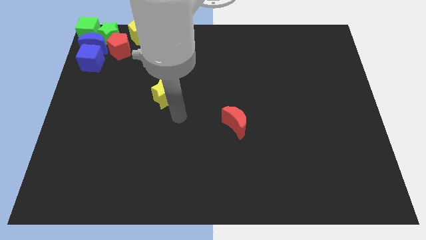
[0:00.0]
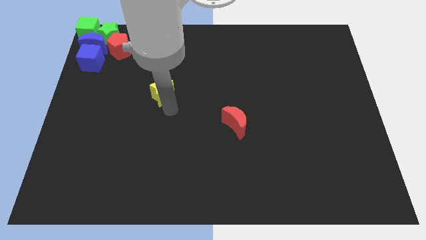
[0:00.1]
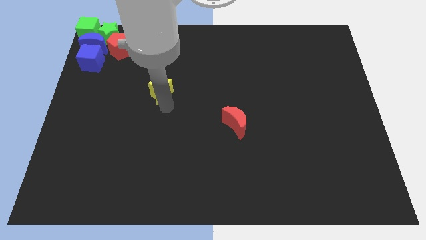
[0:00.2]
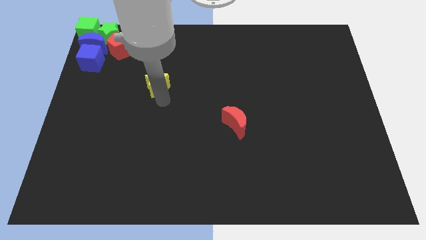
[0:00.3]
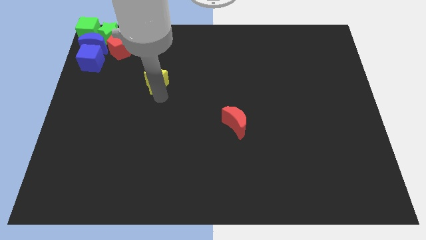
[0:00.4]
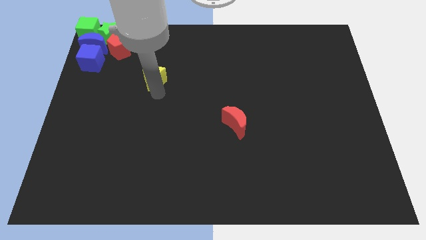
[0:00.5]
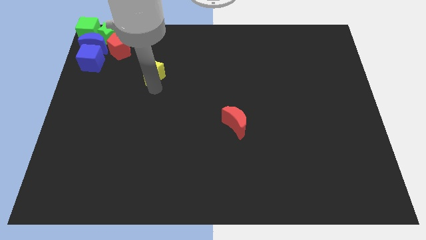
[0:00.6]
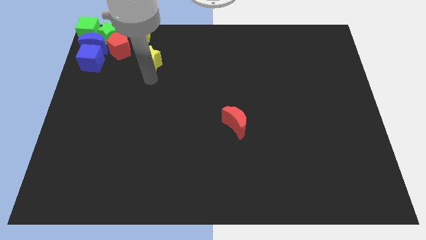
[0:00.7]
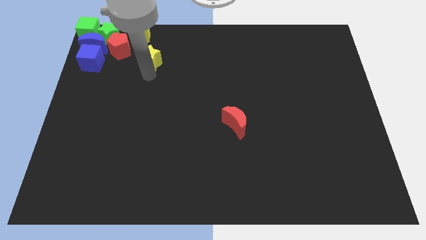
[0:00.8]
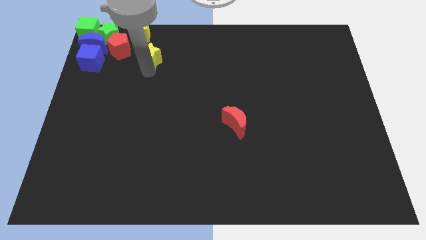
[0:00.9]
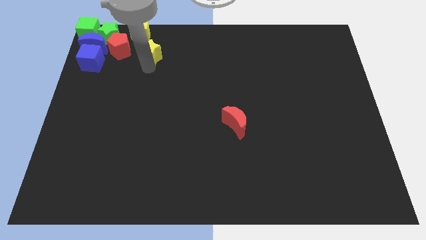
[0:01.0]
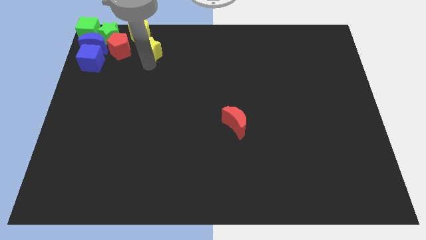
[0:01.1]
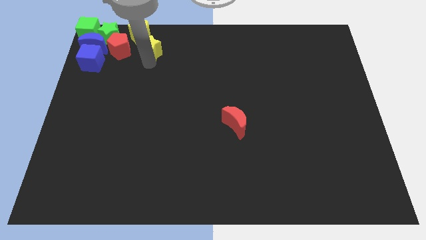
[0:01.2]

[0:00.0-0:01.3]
place yellow star below yellow pentagon

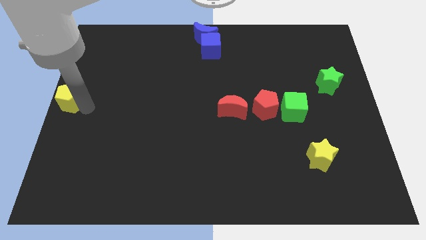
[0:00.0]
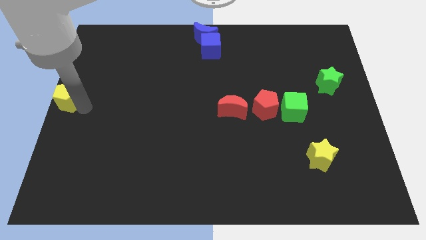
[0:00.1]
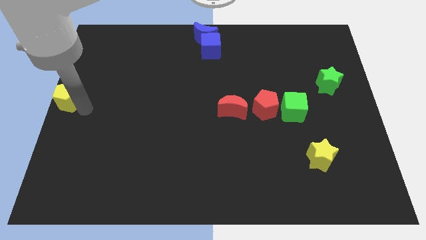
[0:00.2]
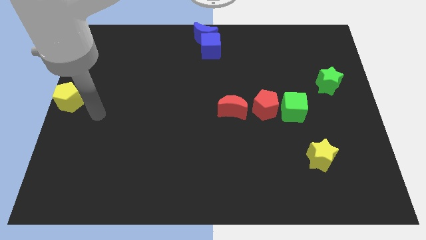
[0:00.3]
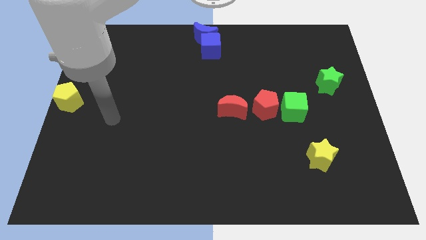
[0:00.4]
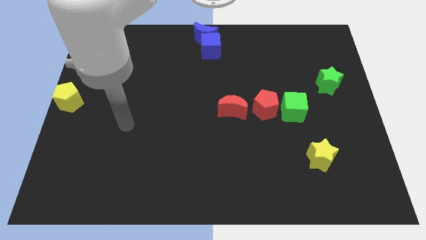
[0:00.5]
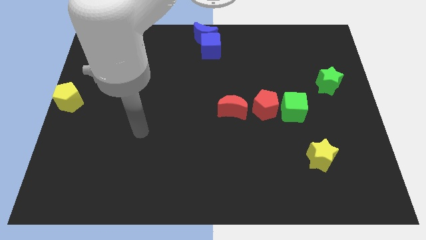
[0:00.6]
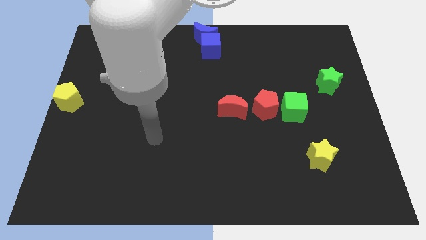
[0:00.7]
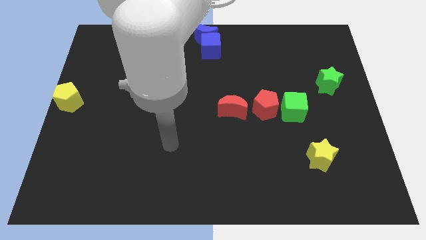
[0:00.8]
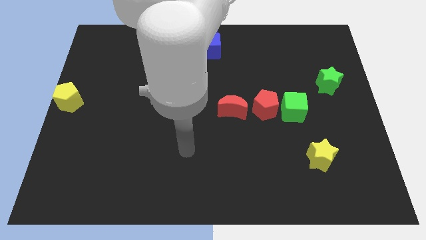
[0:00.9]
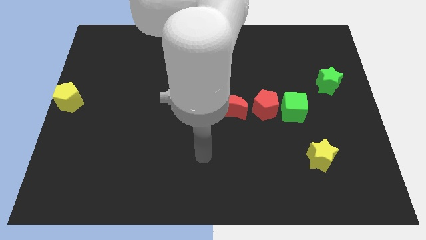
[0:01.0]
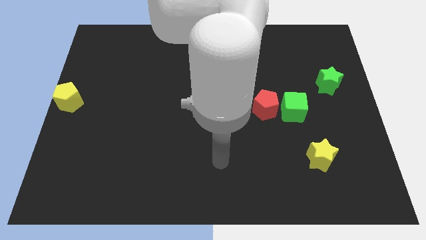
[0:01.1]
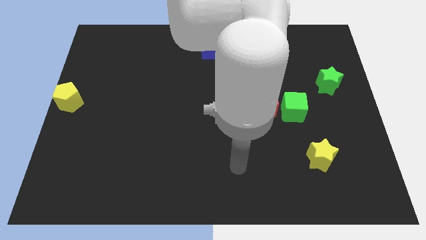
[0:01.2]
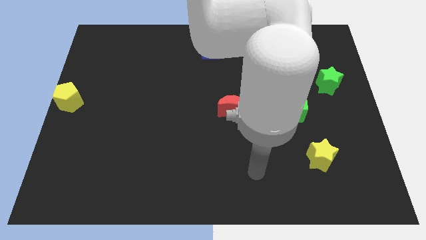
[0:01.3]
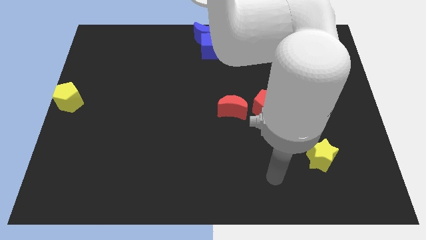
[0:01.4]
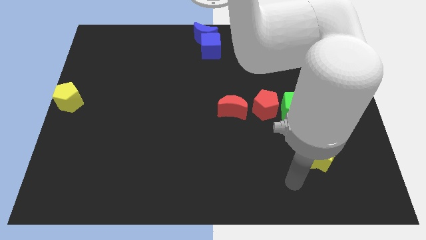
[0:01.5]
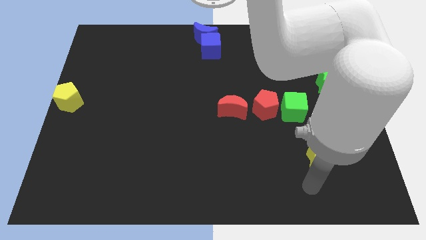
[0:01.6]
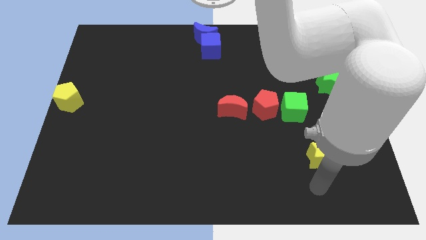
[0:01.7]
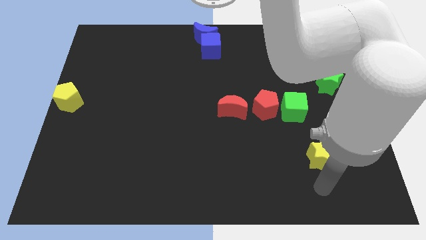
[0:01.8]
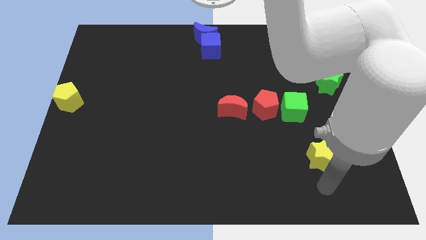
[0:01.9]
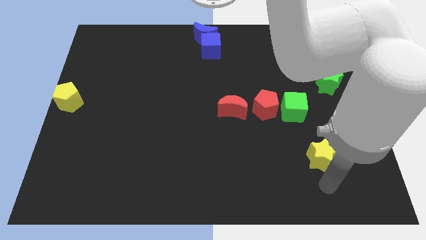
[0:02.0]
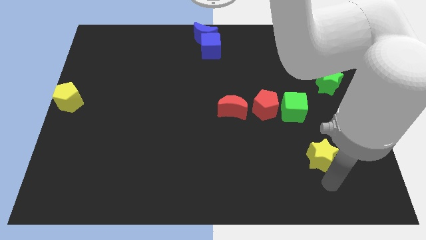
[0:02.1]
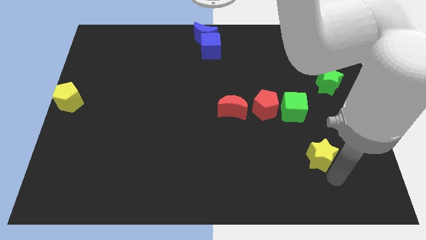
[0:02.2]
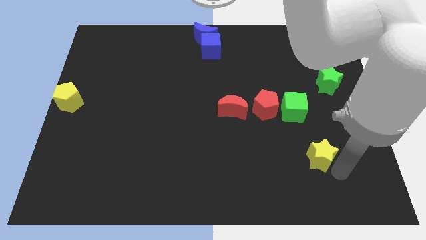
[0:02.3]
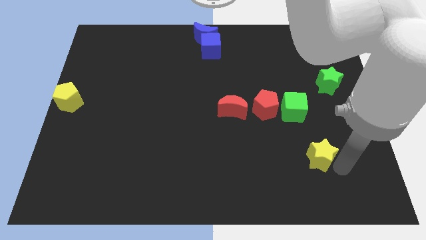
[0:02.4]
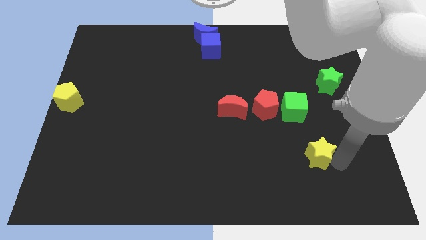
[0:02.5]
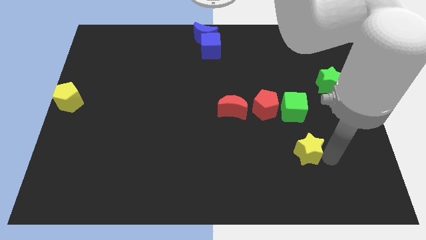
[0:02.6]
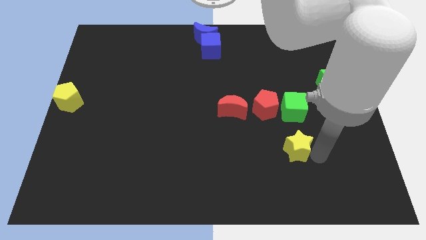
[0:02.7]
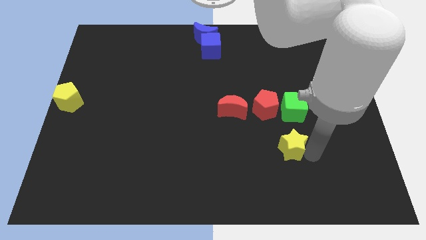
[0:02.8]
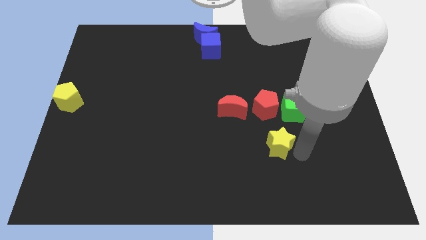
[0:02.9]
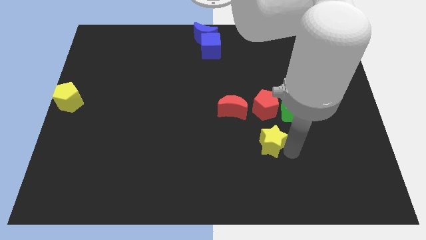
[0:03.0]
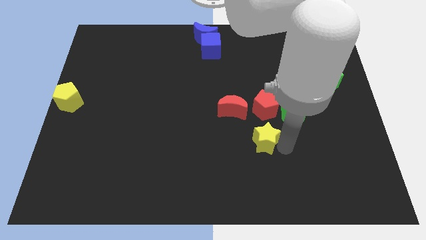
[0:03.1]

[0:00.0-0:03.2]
put the yellow star below the red pentagon

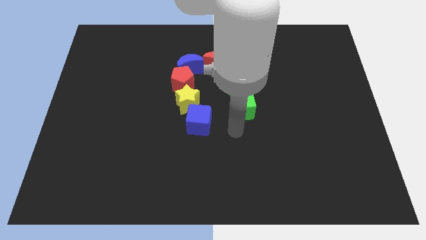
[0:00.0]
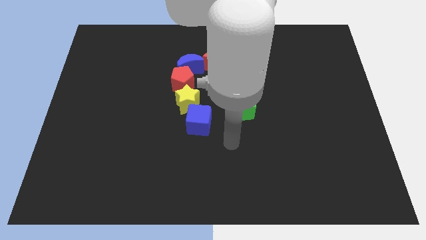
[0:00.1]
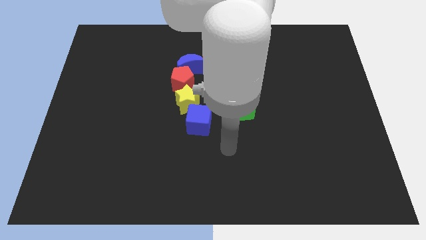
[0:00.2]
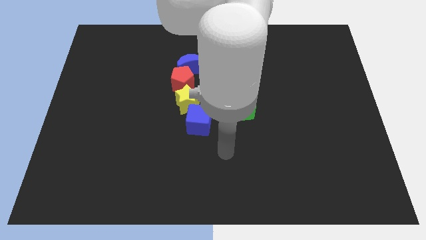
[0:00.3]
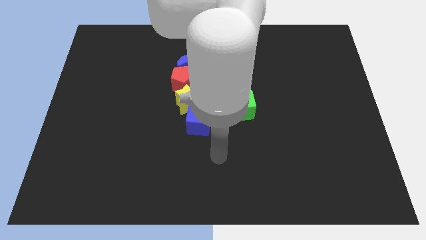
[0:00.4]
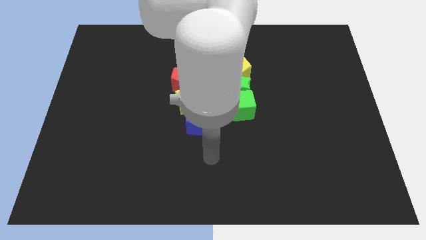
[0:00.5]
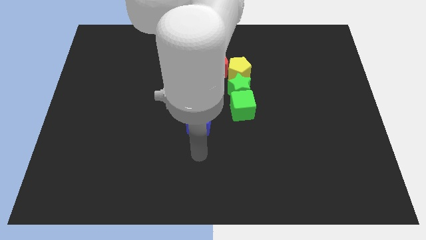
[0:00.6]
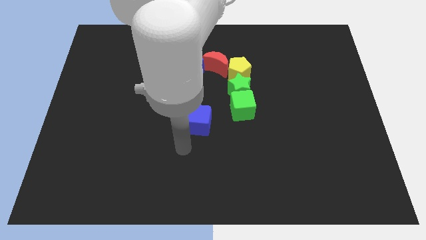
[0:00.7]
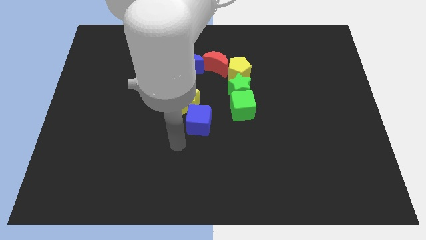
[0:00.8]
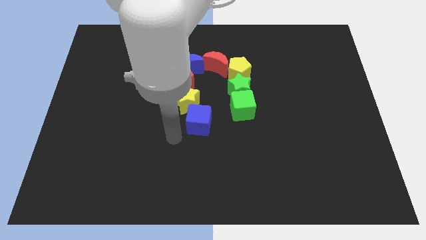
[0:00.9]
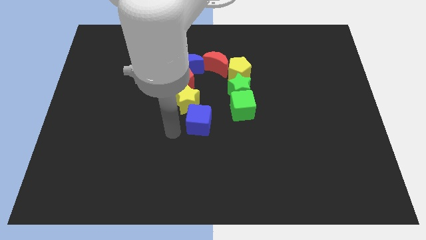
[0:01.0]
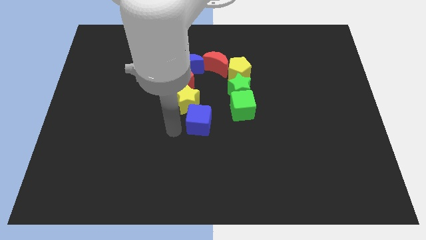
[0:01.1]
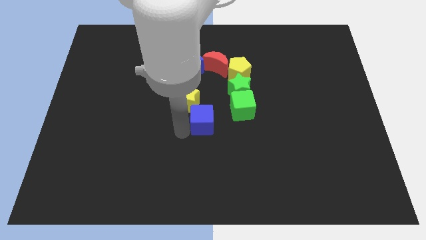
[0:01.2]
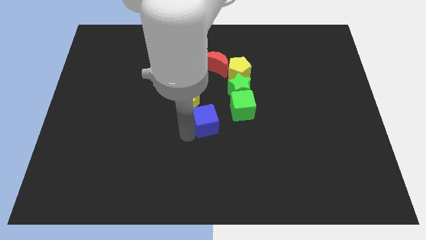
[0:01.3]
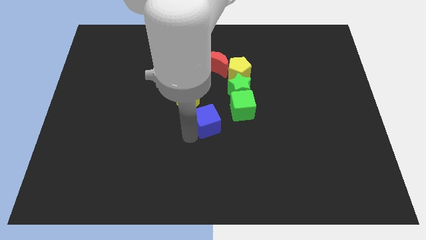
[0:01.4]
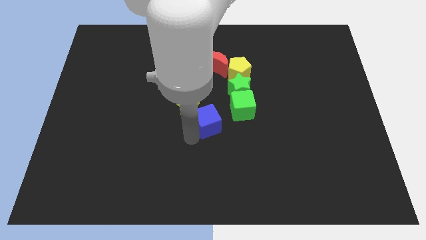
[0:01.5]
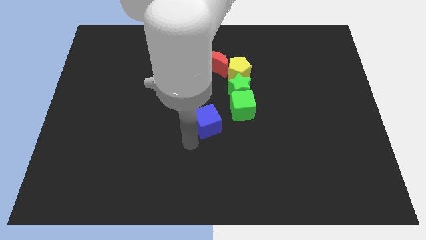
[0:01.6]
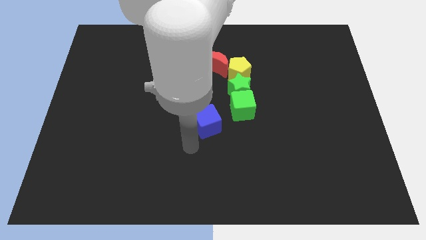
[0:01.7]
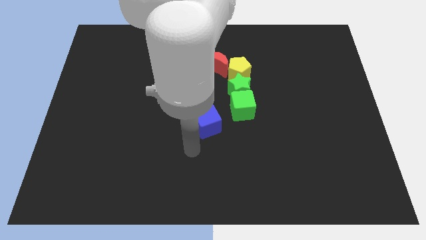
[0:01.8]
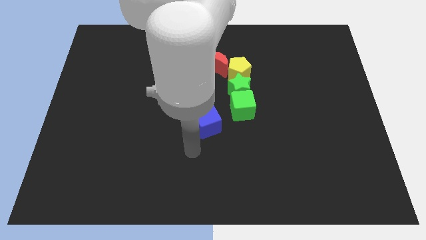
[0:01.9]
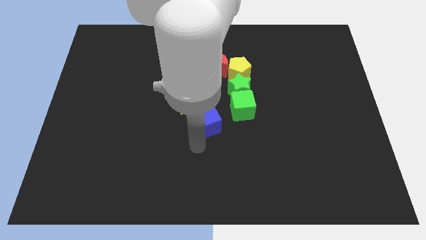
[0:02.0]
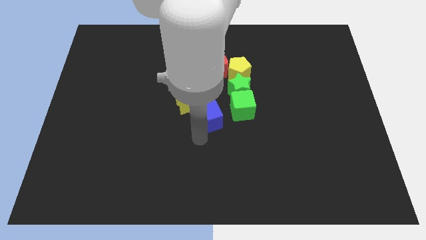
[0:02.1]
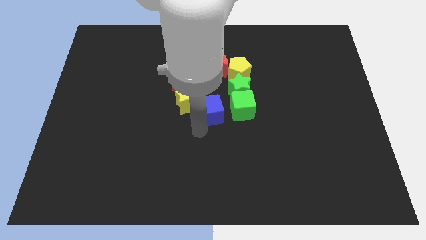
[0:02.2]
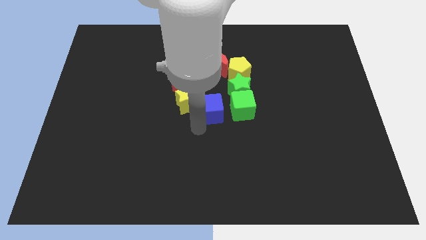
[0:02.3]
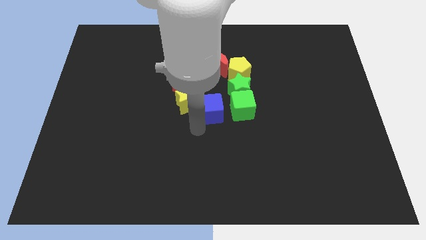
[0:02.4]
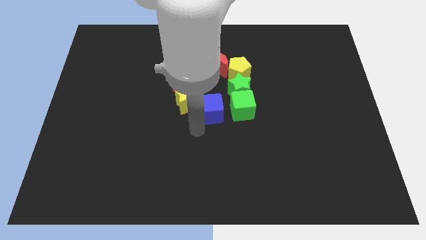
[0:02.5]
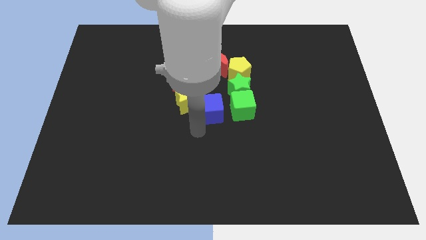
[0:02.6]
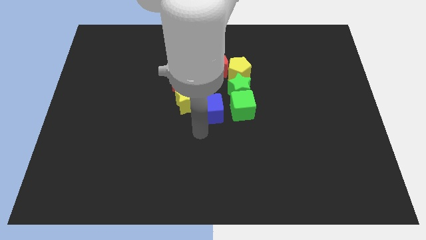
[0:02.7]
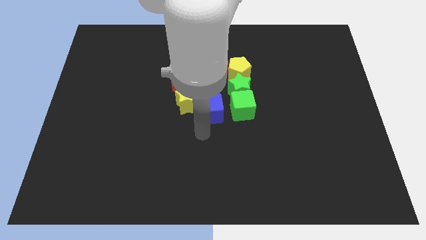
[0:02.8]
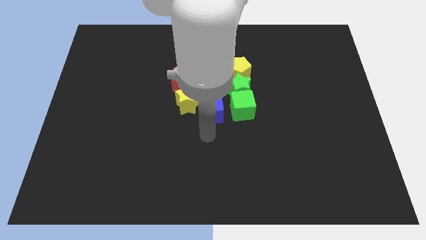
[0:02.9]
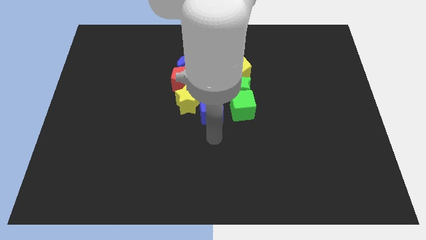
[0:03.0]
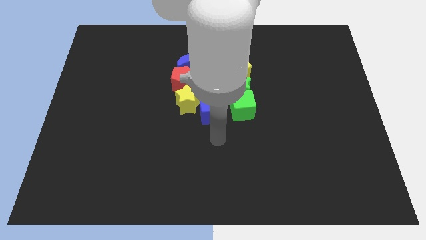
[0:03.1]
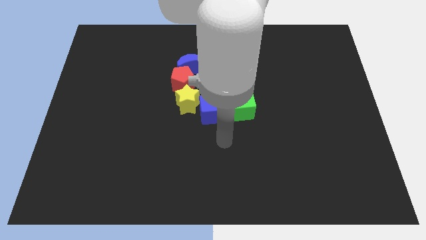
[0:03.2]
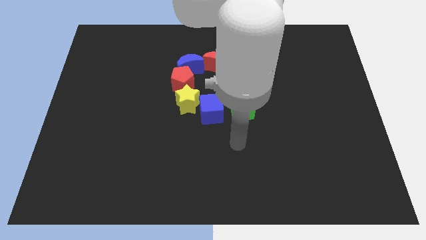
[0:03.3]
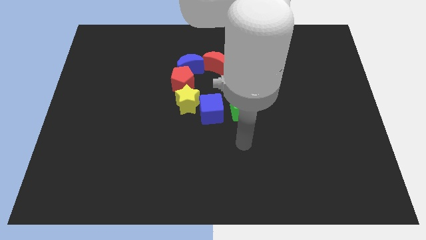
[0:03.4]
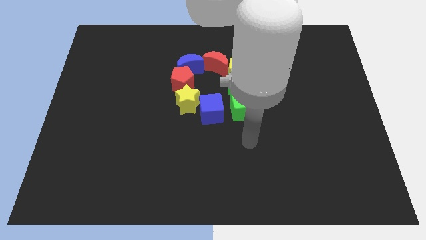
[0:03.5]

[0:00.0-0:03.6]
place the blue cube in between yellow star and green cube

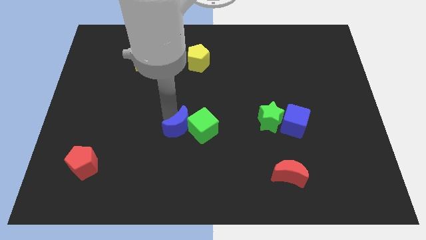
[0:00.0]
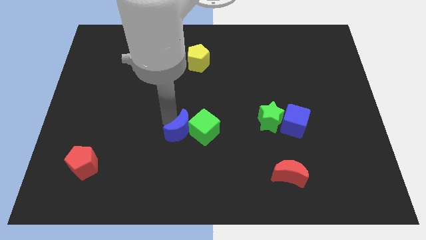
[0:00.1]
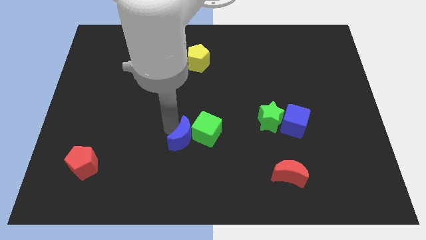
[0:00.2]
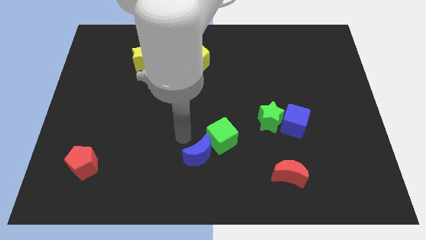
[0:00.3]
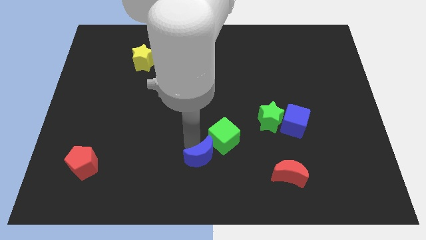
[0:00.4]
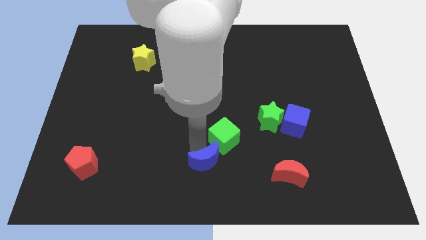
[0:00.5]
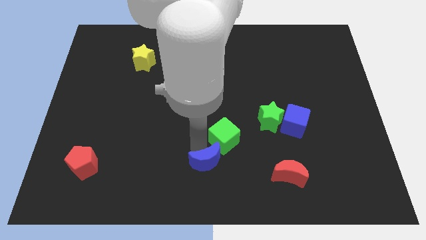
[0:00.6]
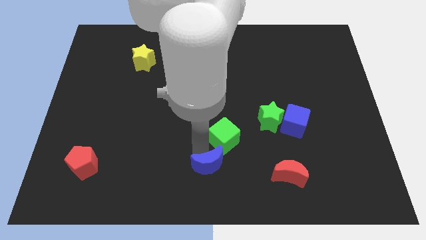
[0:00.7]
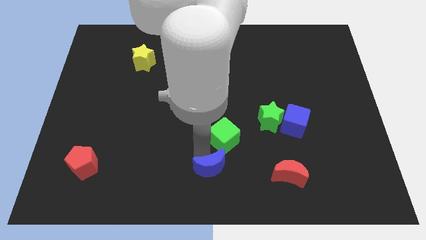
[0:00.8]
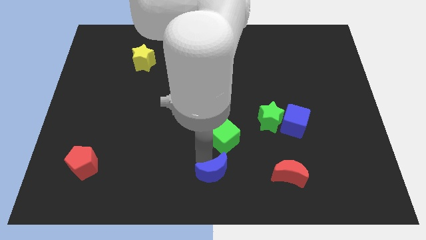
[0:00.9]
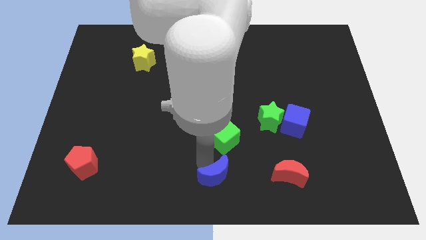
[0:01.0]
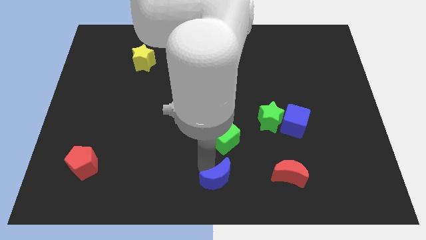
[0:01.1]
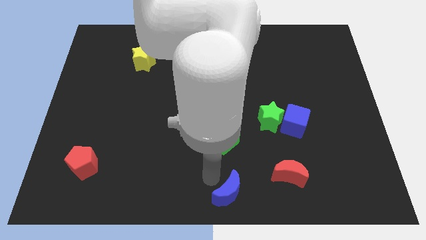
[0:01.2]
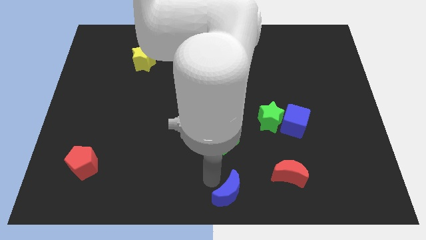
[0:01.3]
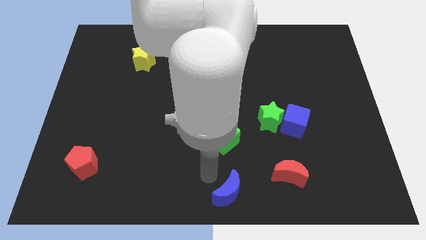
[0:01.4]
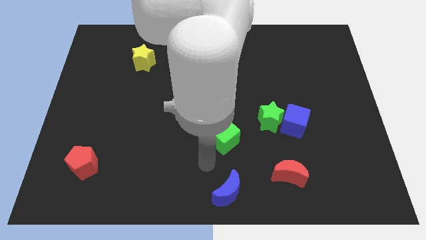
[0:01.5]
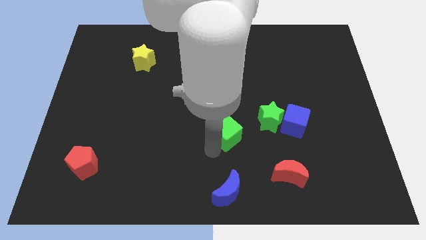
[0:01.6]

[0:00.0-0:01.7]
separate the blue moon and the green cube
